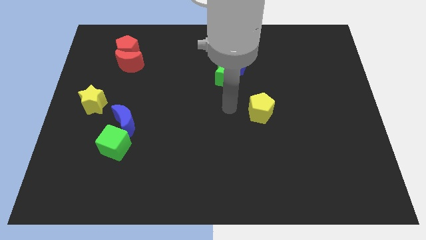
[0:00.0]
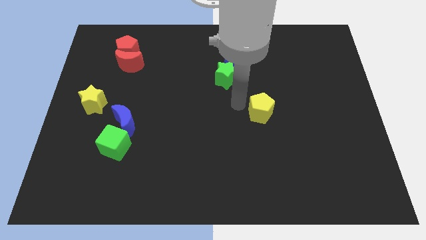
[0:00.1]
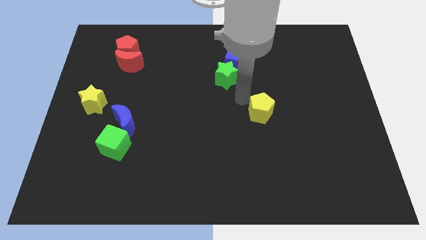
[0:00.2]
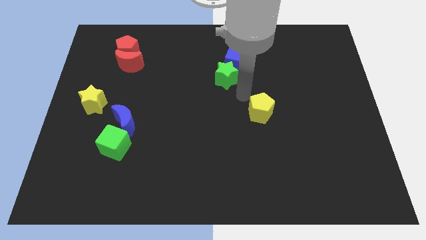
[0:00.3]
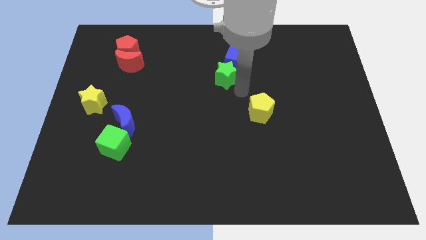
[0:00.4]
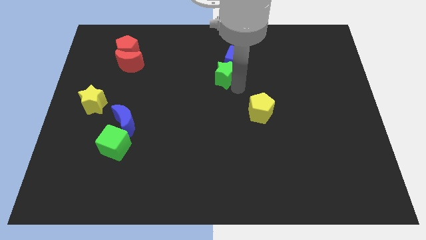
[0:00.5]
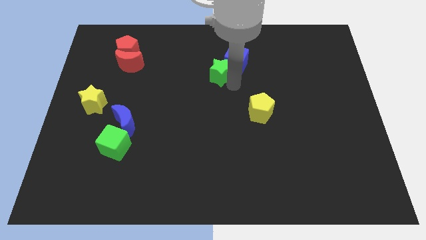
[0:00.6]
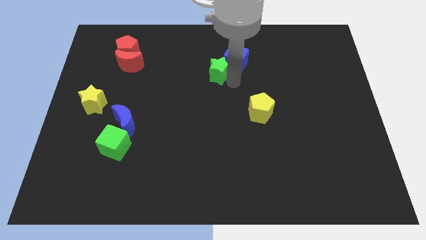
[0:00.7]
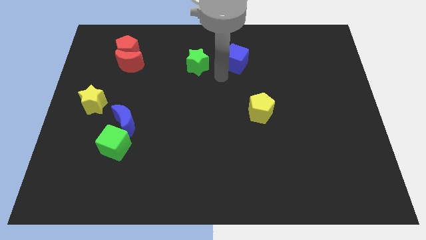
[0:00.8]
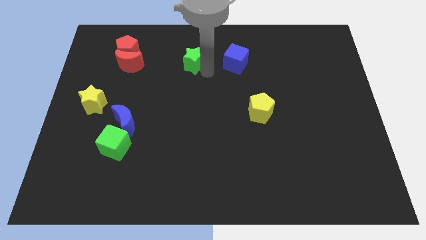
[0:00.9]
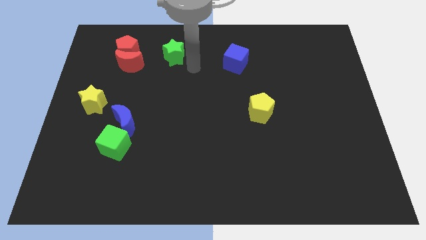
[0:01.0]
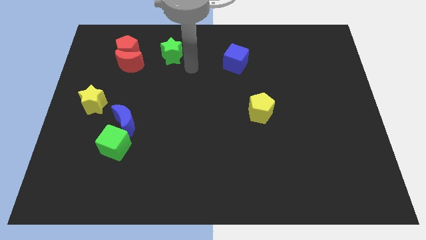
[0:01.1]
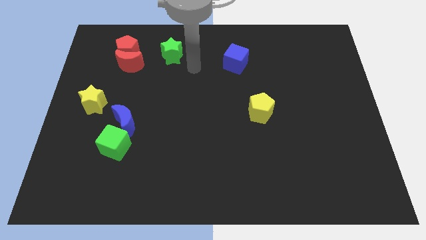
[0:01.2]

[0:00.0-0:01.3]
push the green star to the left of the board

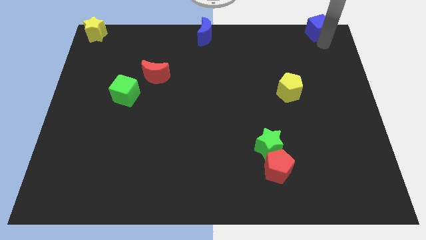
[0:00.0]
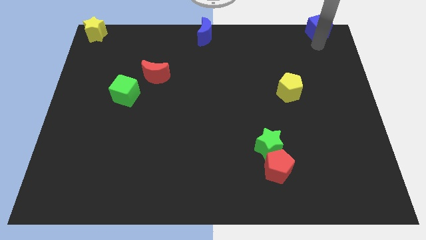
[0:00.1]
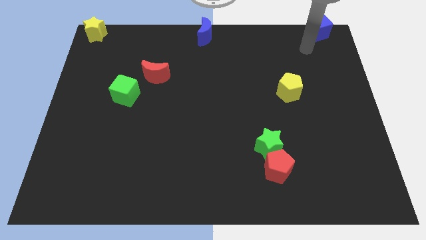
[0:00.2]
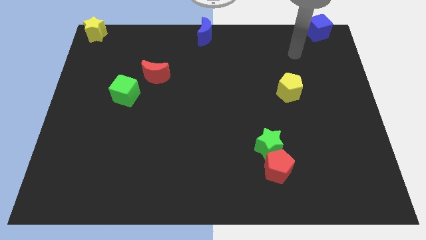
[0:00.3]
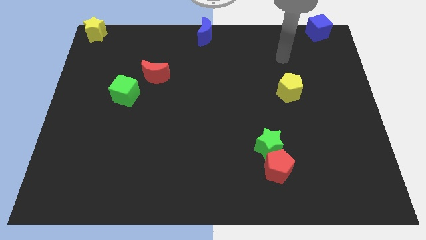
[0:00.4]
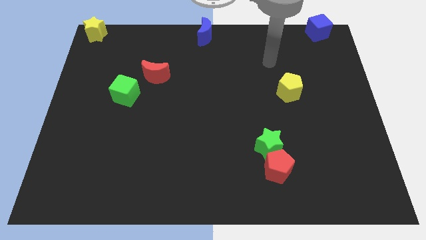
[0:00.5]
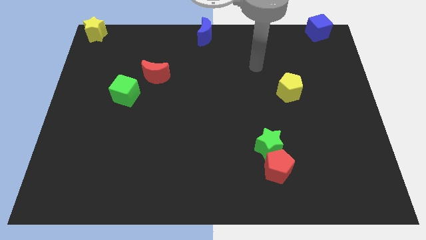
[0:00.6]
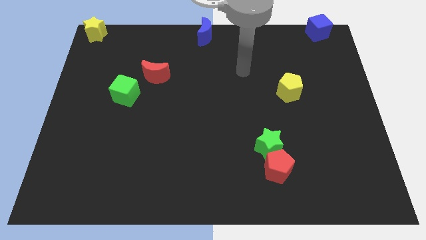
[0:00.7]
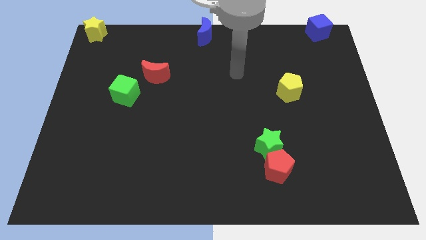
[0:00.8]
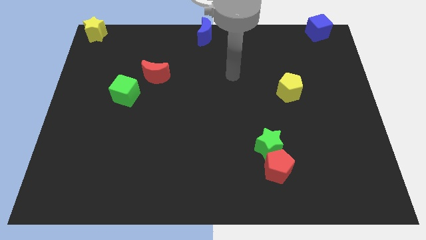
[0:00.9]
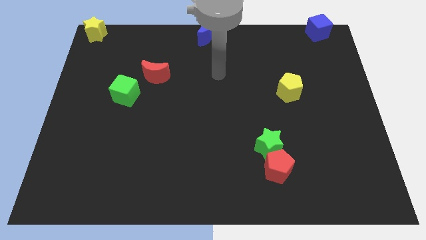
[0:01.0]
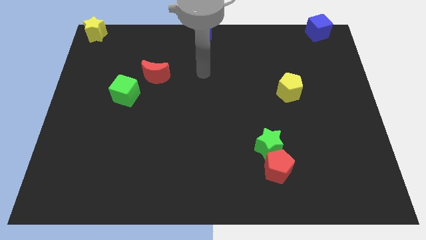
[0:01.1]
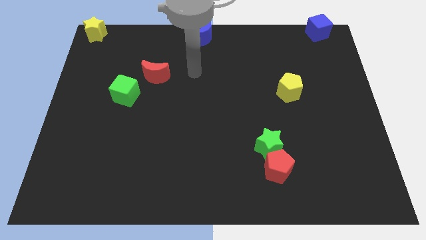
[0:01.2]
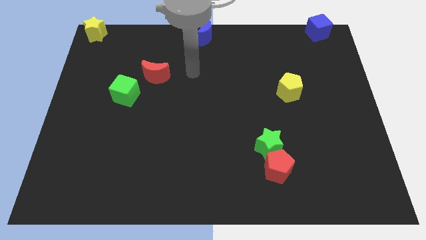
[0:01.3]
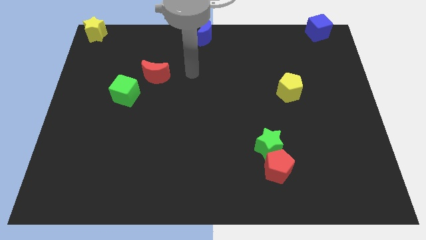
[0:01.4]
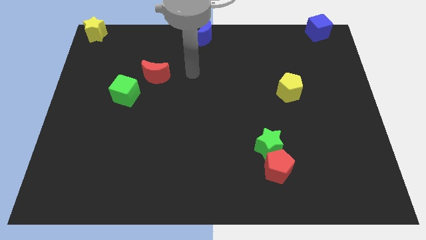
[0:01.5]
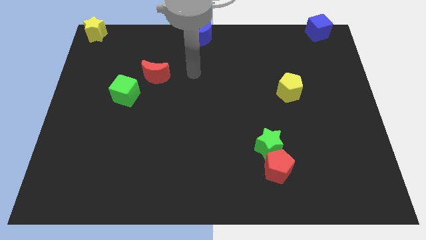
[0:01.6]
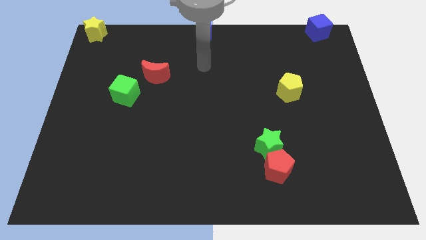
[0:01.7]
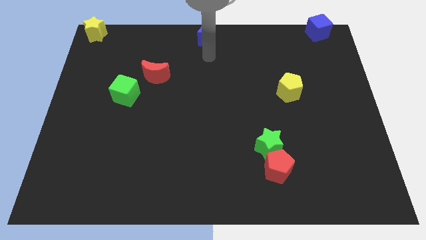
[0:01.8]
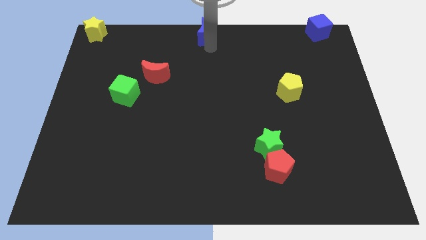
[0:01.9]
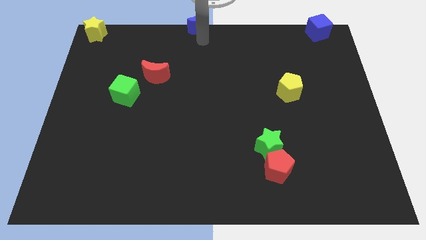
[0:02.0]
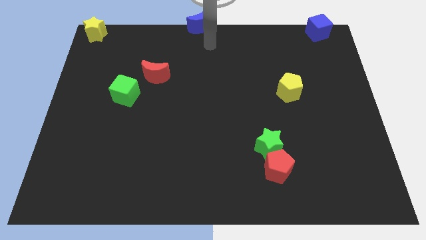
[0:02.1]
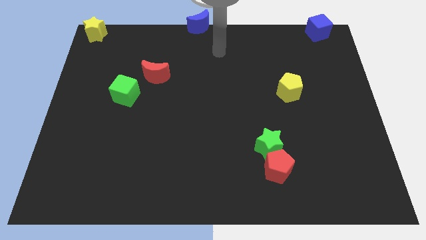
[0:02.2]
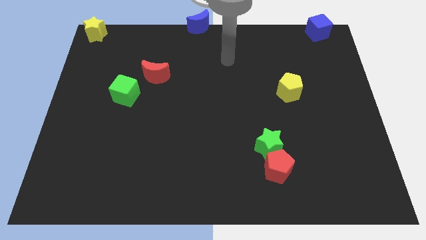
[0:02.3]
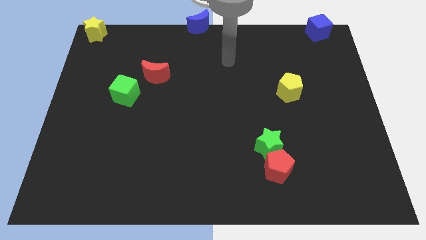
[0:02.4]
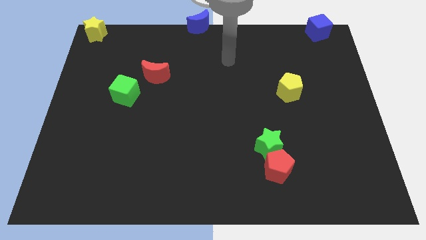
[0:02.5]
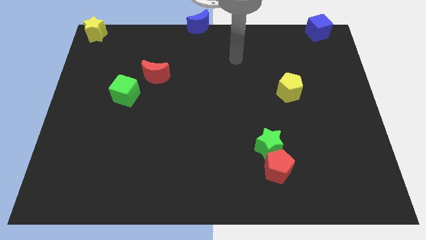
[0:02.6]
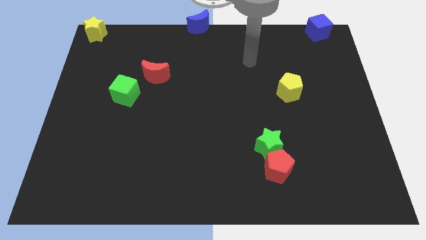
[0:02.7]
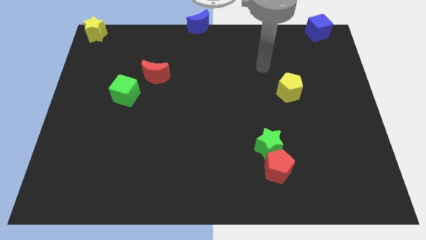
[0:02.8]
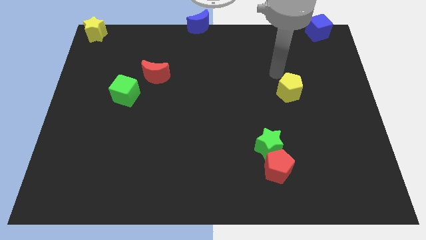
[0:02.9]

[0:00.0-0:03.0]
move your arm away from the blue cube

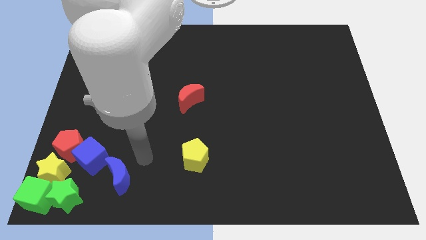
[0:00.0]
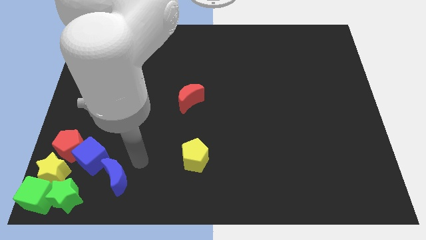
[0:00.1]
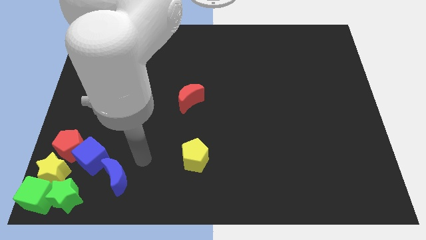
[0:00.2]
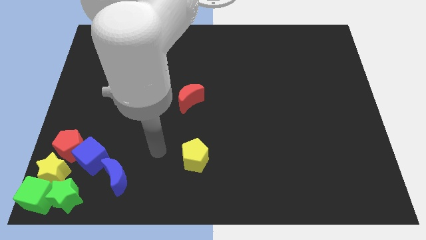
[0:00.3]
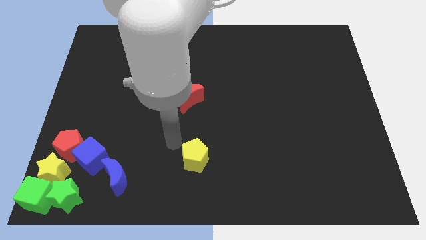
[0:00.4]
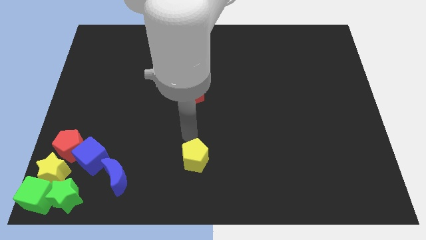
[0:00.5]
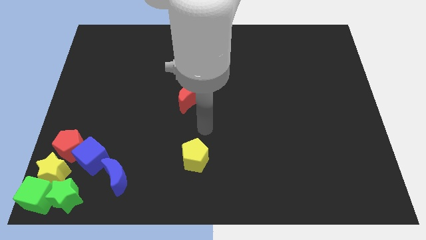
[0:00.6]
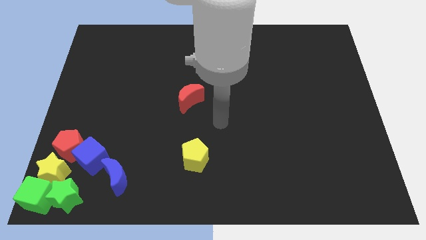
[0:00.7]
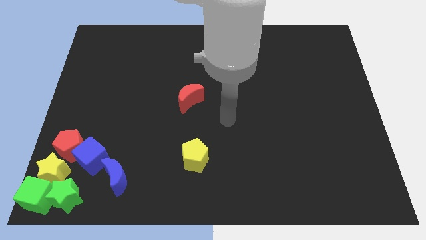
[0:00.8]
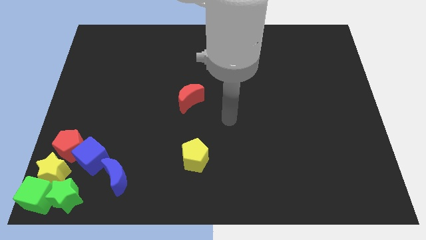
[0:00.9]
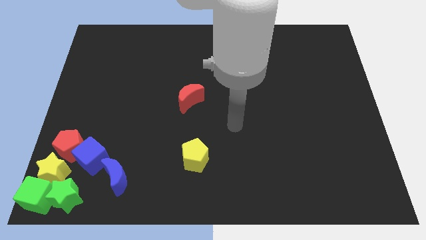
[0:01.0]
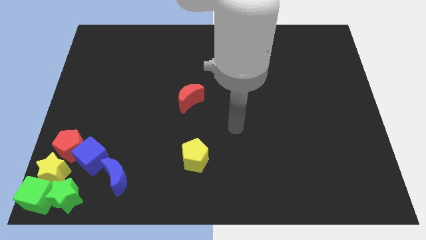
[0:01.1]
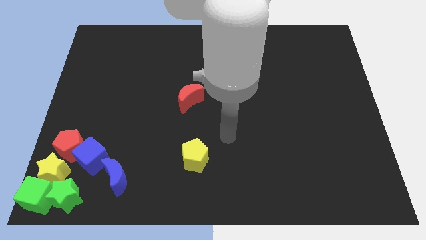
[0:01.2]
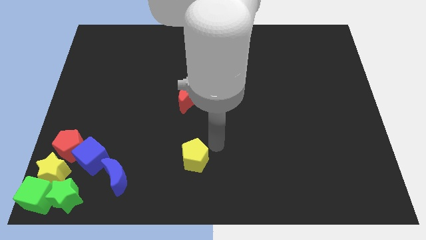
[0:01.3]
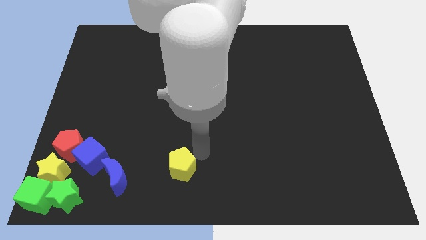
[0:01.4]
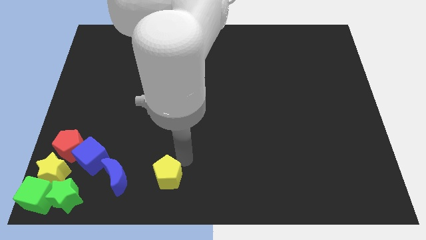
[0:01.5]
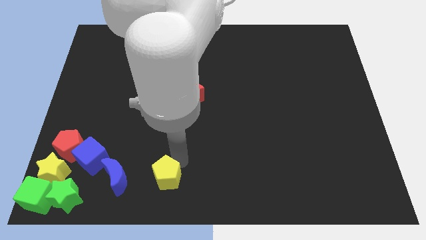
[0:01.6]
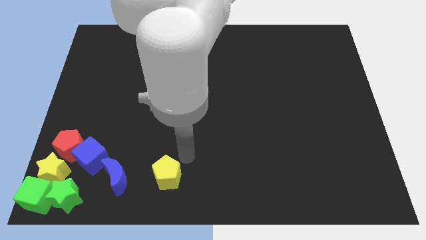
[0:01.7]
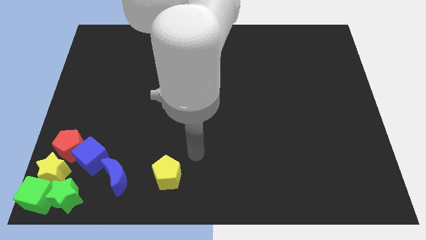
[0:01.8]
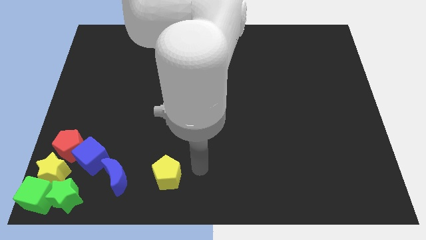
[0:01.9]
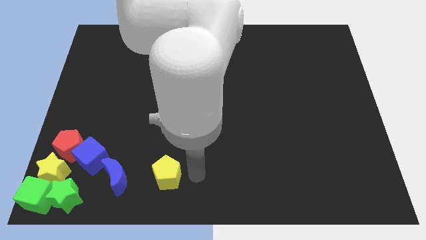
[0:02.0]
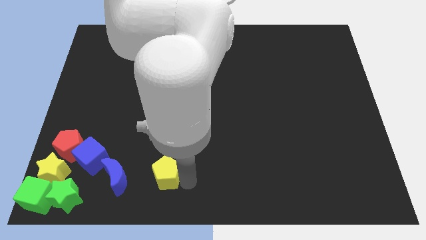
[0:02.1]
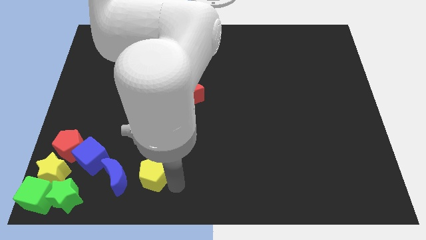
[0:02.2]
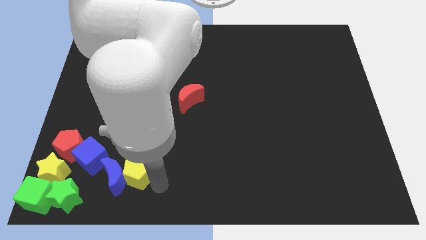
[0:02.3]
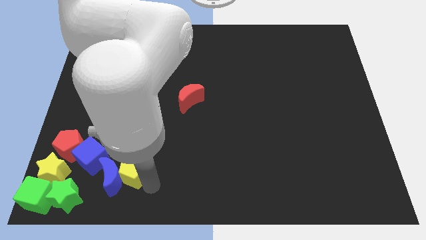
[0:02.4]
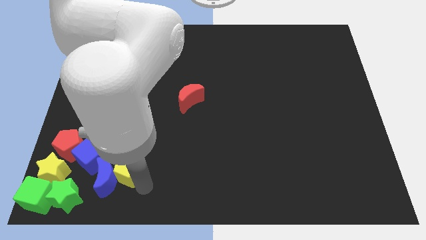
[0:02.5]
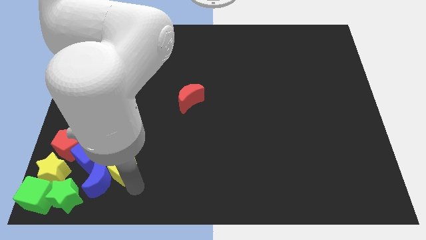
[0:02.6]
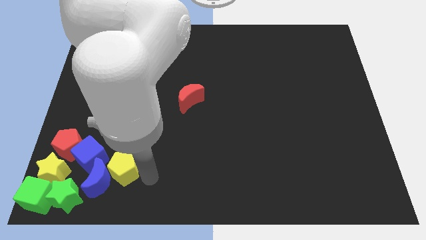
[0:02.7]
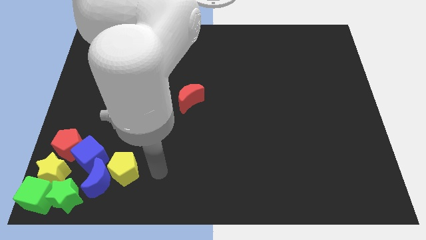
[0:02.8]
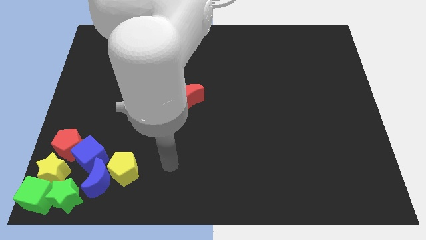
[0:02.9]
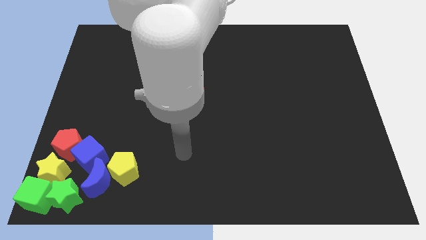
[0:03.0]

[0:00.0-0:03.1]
push the yellow pentagon into the group of blocks

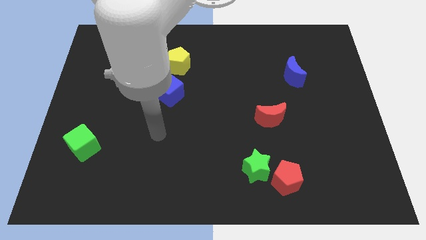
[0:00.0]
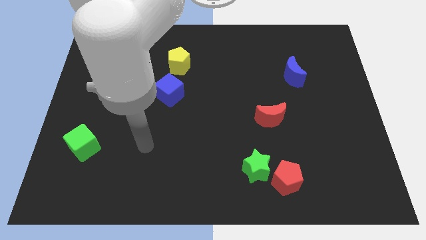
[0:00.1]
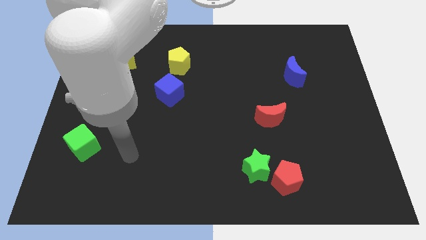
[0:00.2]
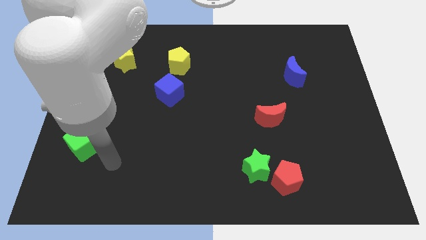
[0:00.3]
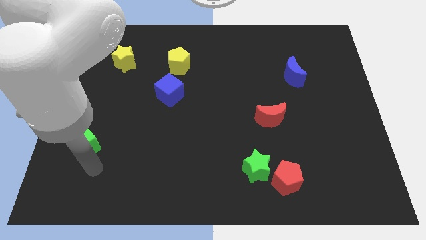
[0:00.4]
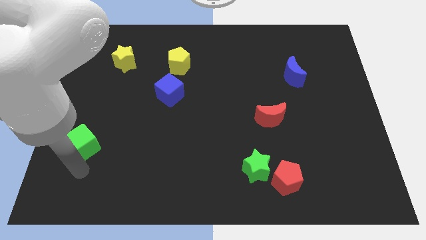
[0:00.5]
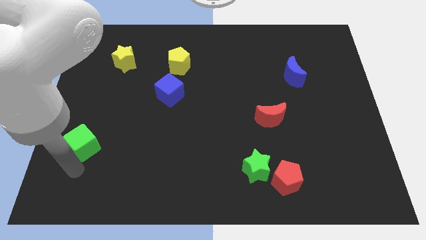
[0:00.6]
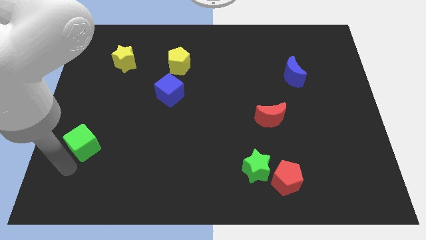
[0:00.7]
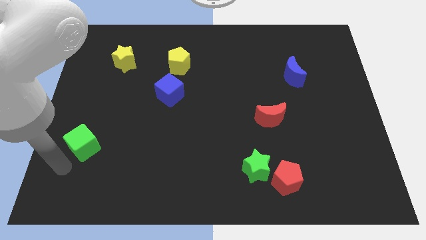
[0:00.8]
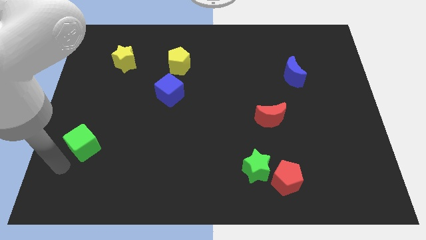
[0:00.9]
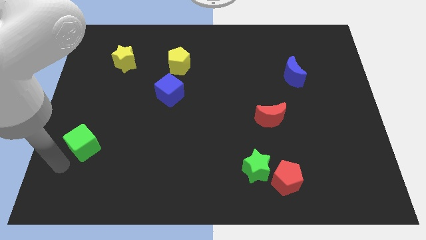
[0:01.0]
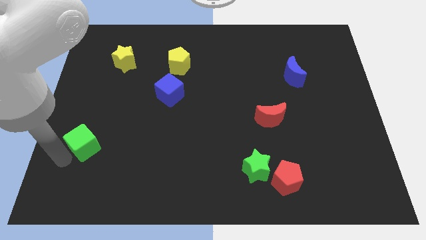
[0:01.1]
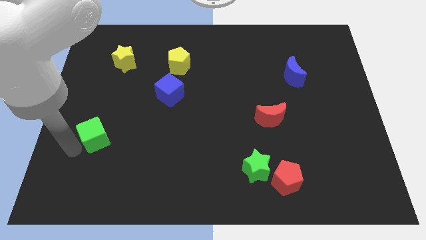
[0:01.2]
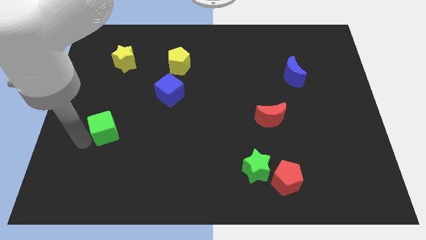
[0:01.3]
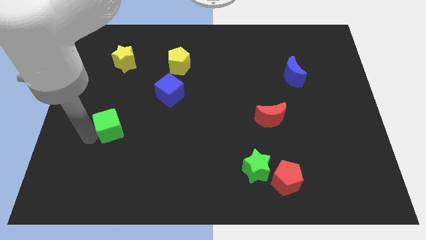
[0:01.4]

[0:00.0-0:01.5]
place the green cube below the yellow star
